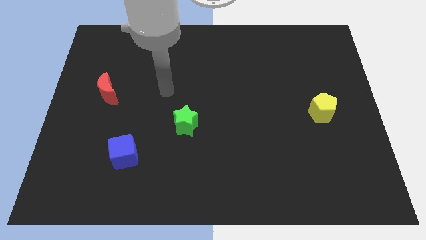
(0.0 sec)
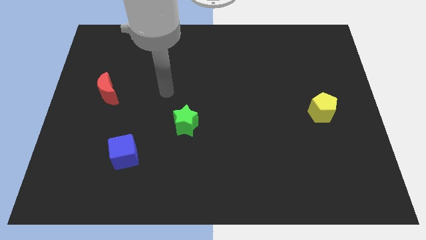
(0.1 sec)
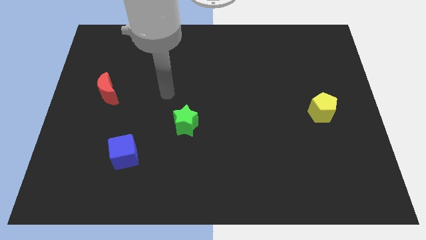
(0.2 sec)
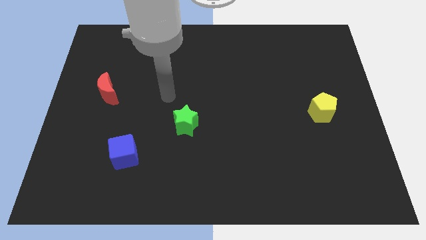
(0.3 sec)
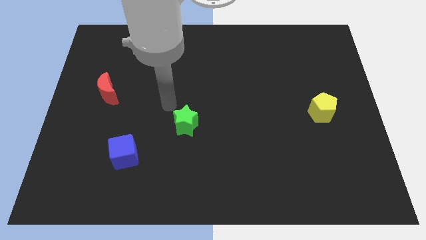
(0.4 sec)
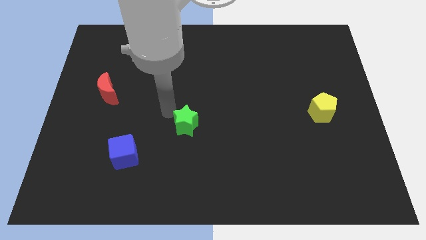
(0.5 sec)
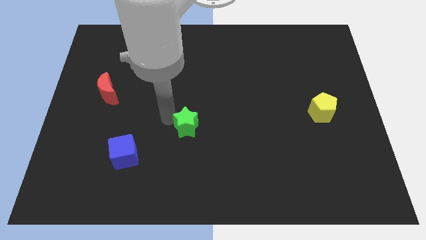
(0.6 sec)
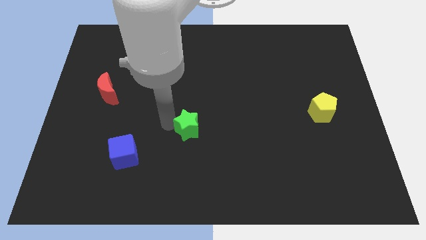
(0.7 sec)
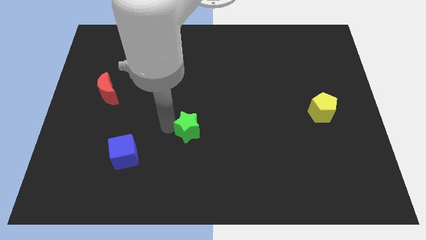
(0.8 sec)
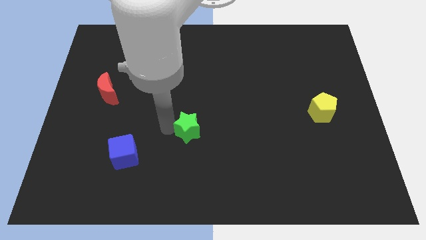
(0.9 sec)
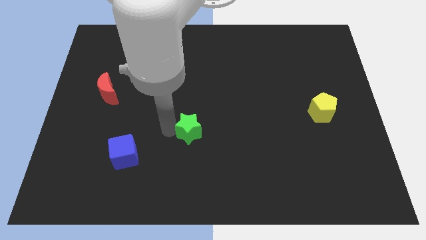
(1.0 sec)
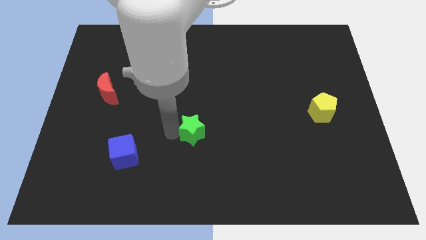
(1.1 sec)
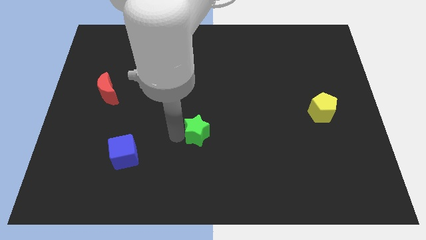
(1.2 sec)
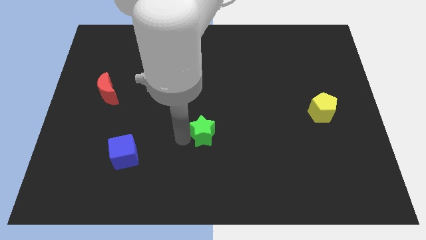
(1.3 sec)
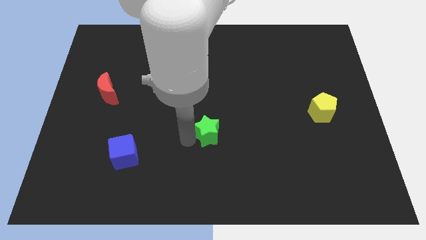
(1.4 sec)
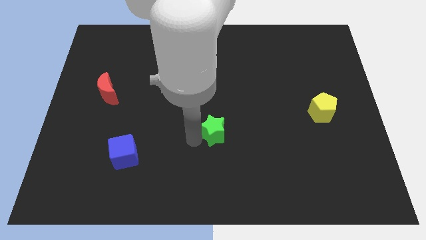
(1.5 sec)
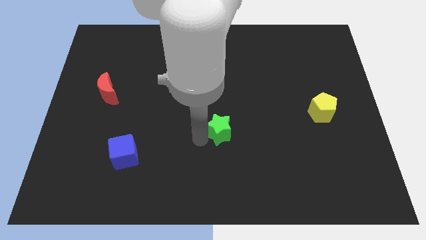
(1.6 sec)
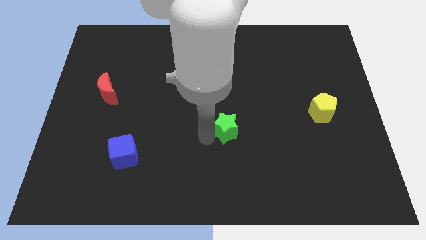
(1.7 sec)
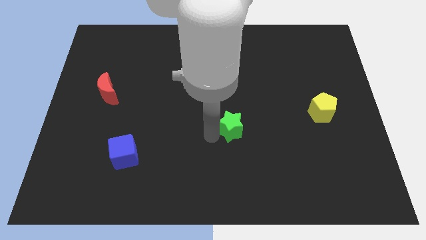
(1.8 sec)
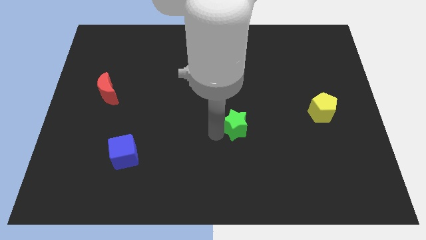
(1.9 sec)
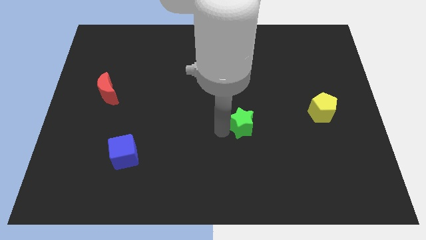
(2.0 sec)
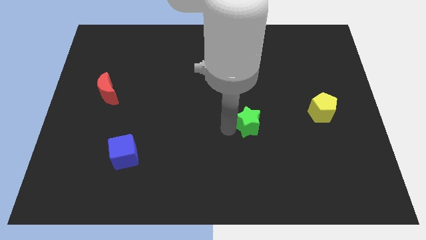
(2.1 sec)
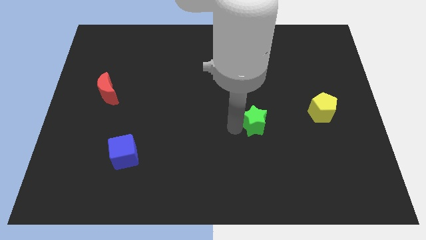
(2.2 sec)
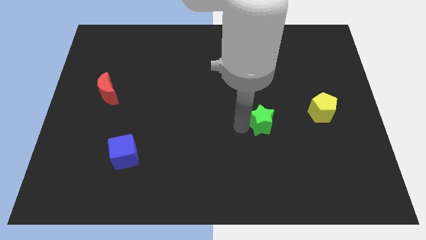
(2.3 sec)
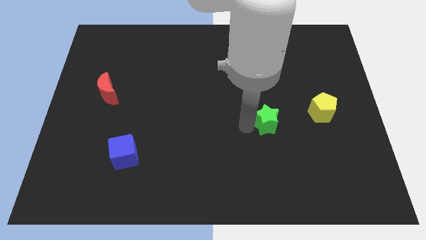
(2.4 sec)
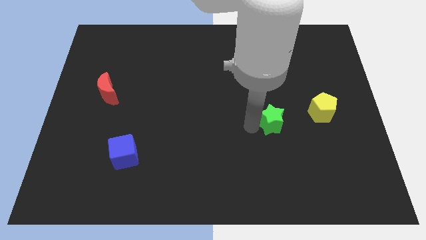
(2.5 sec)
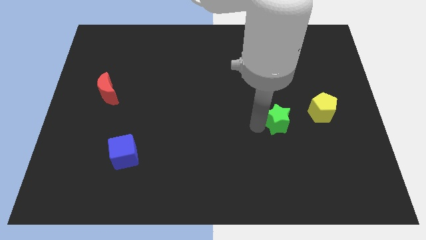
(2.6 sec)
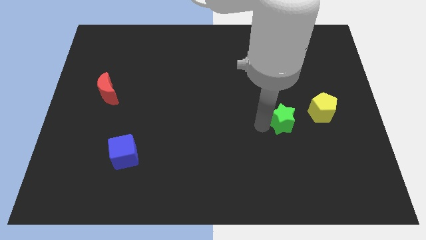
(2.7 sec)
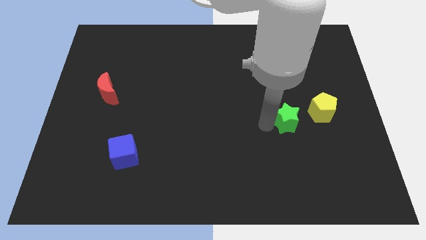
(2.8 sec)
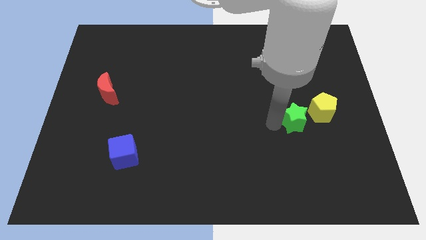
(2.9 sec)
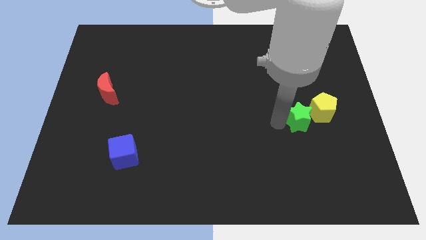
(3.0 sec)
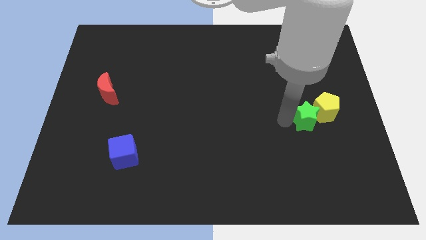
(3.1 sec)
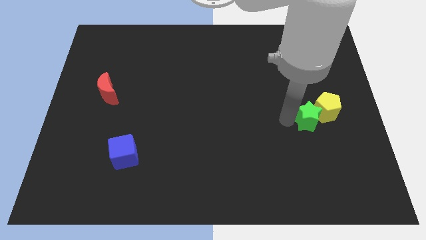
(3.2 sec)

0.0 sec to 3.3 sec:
put the green star to the yellow pentagon

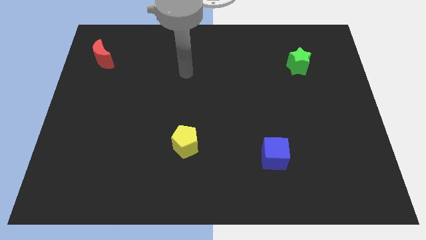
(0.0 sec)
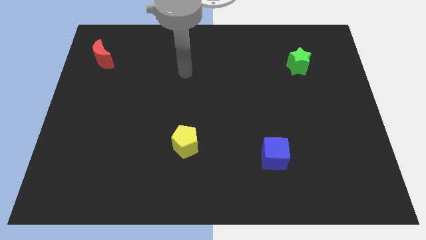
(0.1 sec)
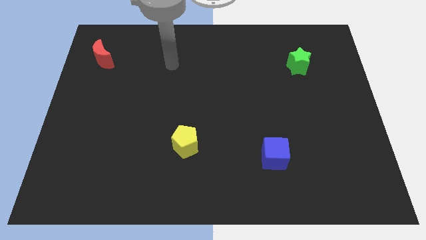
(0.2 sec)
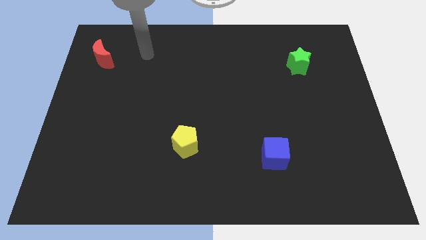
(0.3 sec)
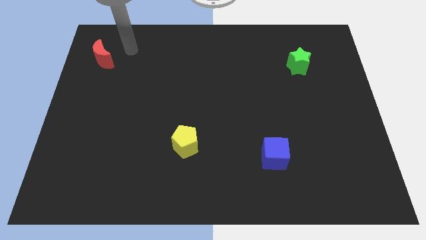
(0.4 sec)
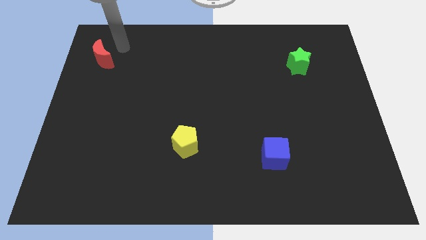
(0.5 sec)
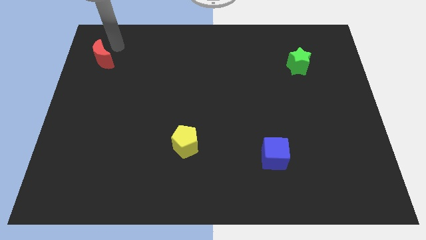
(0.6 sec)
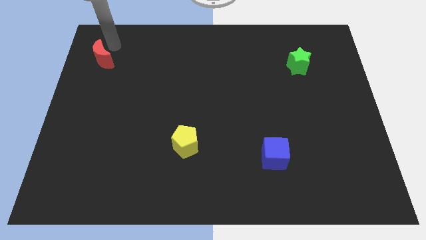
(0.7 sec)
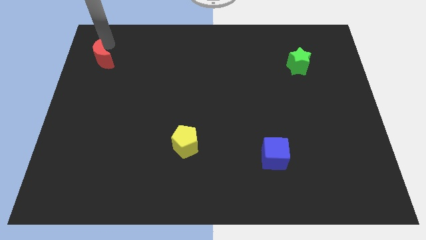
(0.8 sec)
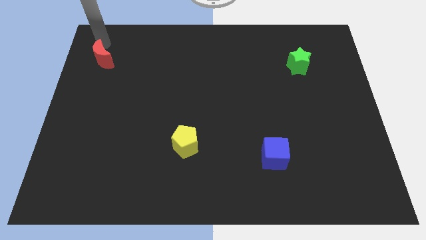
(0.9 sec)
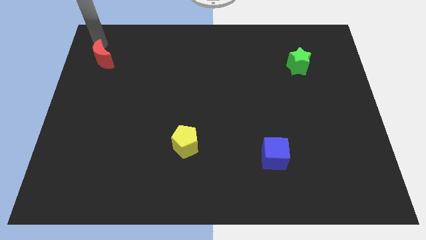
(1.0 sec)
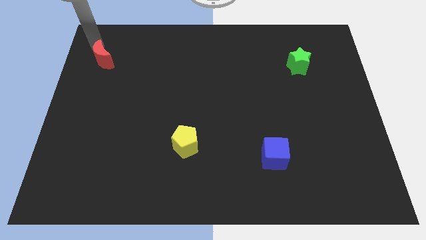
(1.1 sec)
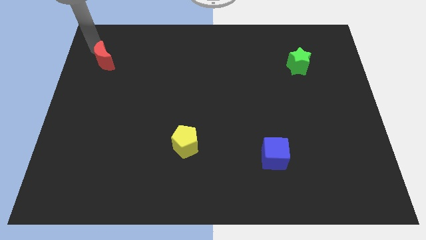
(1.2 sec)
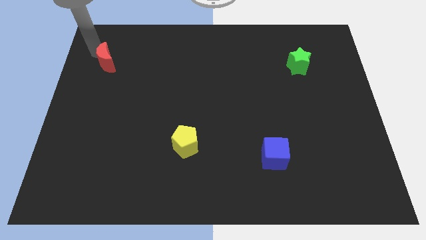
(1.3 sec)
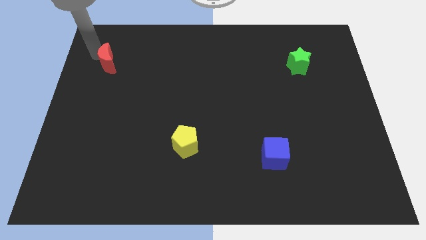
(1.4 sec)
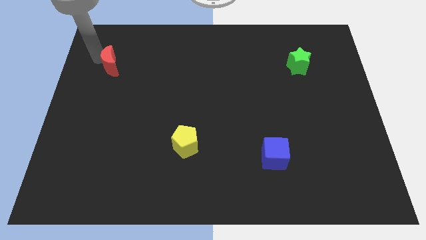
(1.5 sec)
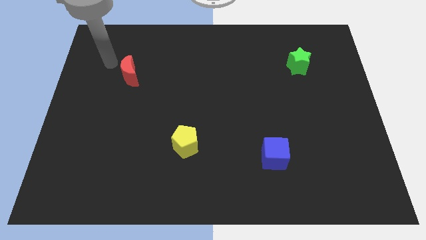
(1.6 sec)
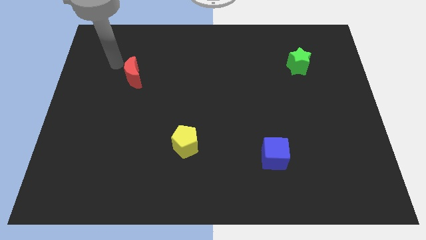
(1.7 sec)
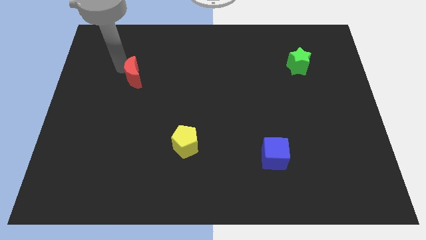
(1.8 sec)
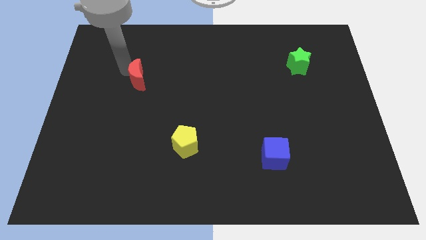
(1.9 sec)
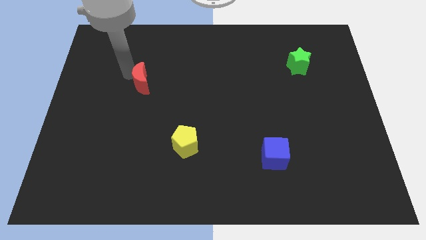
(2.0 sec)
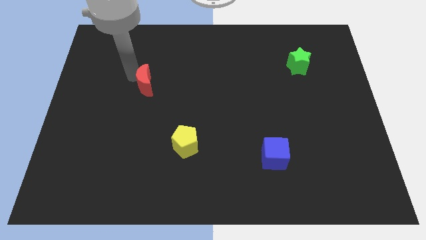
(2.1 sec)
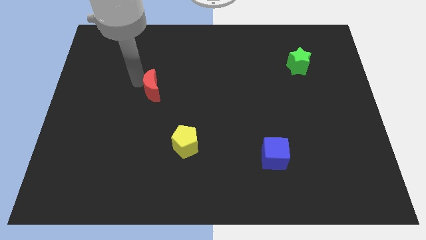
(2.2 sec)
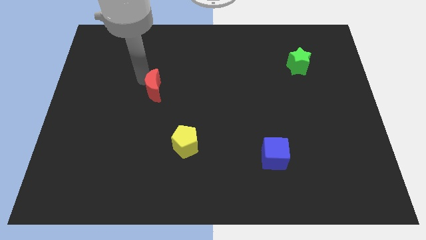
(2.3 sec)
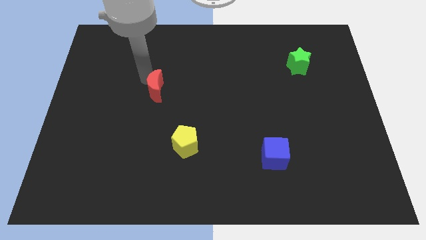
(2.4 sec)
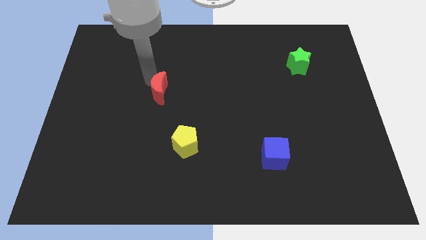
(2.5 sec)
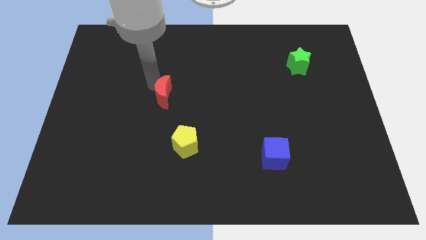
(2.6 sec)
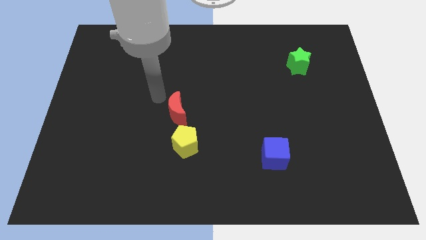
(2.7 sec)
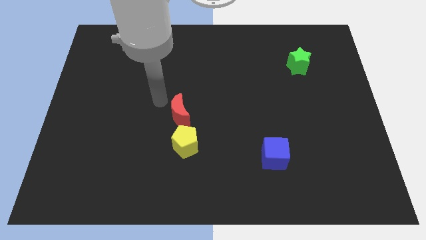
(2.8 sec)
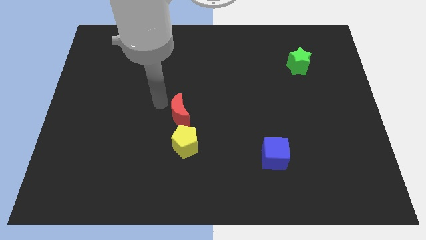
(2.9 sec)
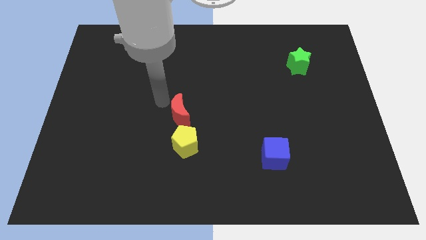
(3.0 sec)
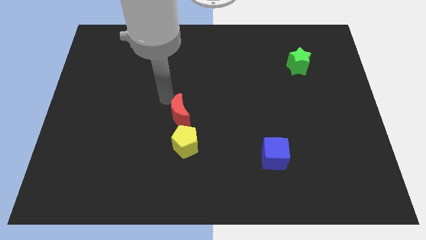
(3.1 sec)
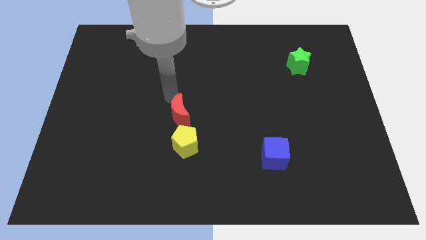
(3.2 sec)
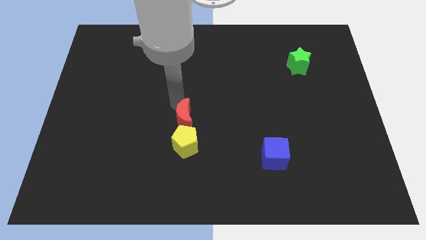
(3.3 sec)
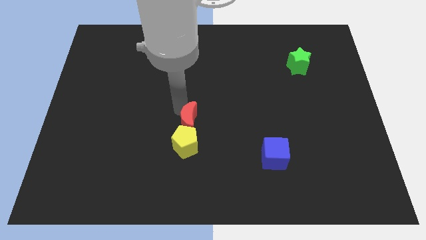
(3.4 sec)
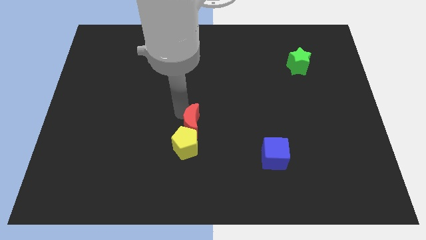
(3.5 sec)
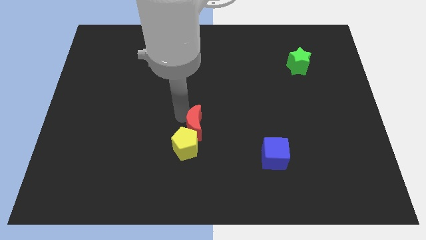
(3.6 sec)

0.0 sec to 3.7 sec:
push the red block close to the pentagon

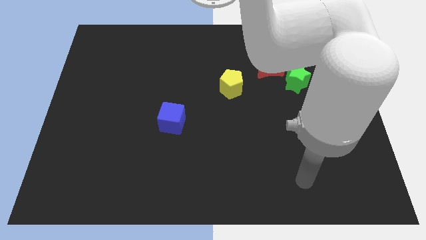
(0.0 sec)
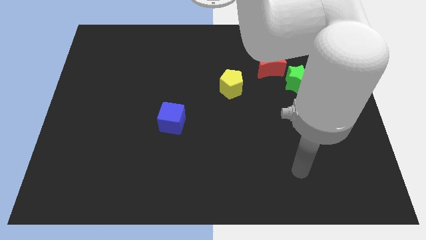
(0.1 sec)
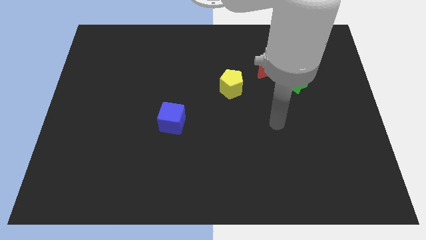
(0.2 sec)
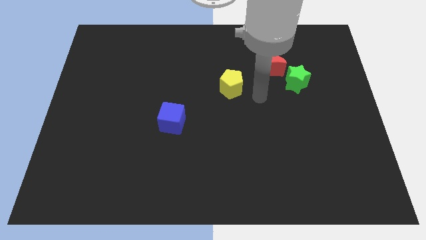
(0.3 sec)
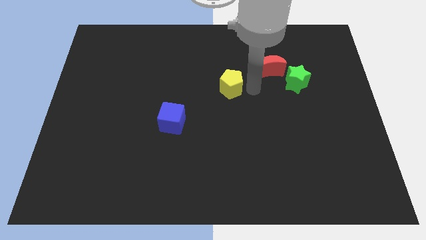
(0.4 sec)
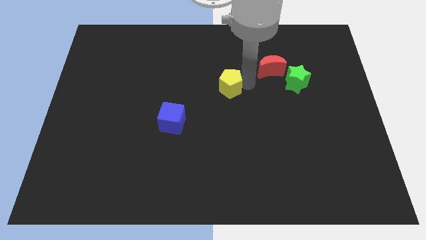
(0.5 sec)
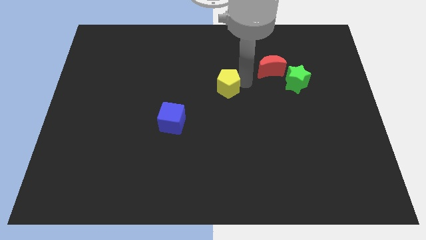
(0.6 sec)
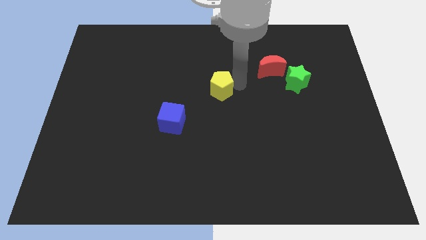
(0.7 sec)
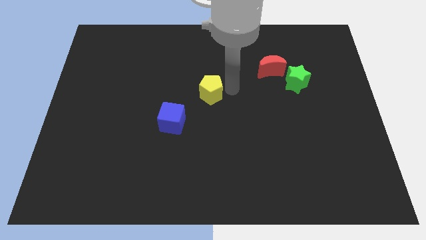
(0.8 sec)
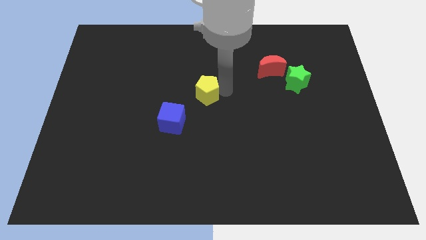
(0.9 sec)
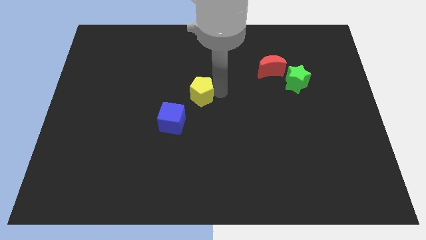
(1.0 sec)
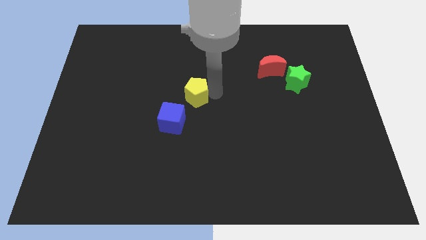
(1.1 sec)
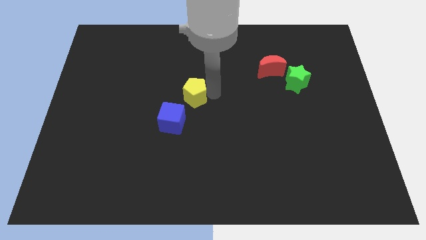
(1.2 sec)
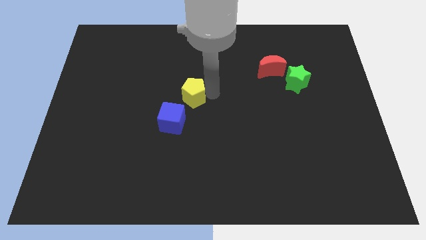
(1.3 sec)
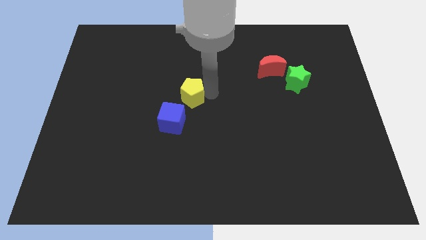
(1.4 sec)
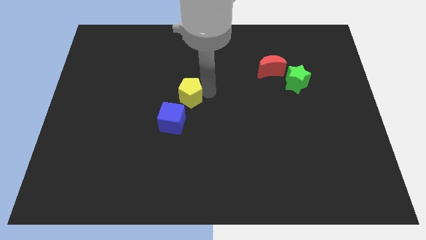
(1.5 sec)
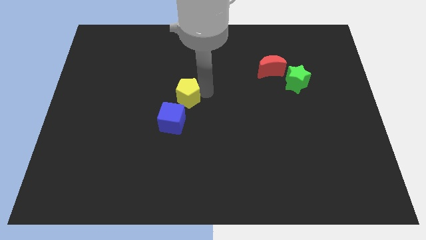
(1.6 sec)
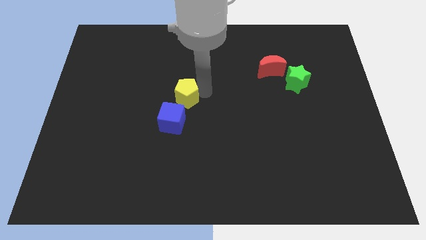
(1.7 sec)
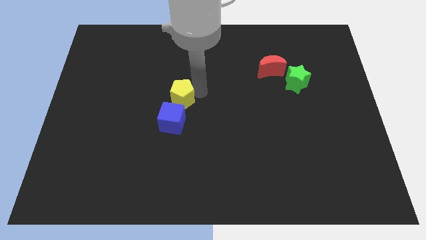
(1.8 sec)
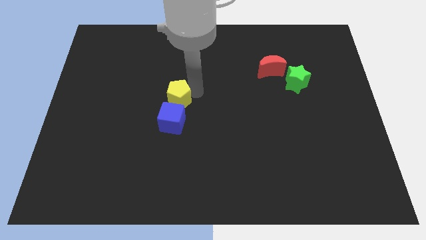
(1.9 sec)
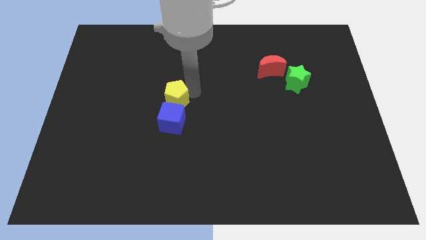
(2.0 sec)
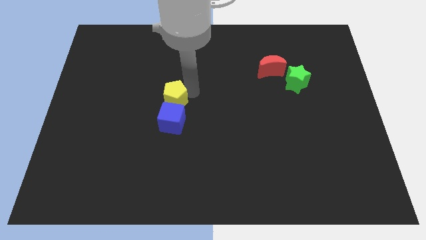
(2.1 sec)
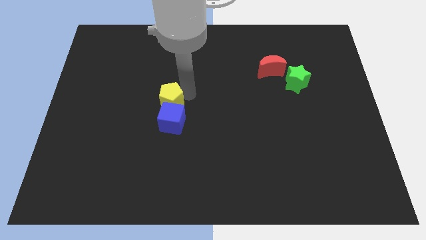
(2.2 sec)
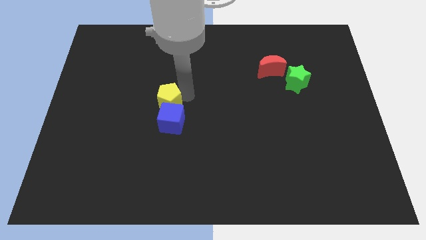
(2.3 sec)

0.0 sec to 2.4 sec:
push the pentagon towards the blue block
